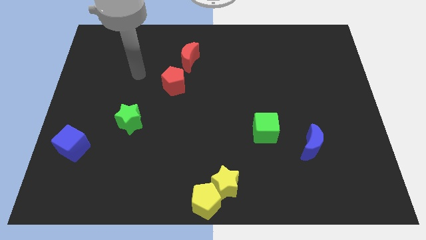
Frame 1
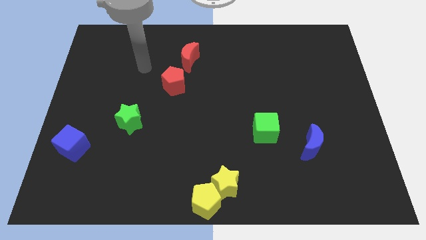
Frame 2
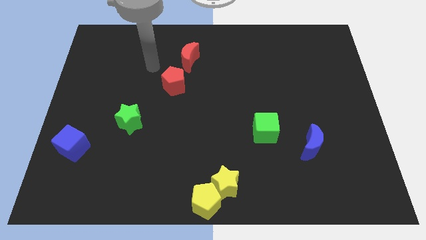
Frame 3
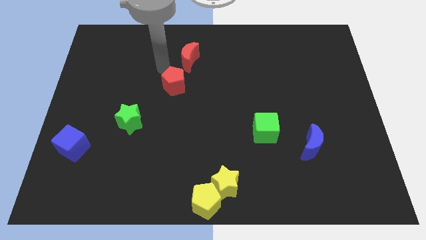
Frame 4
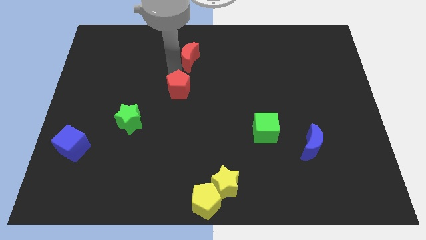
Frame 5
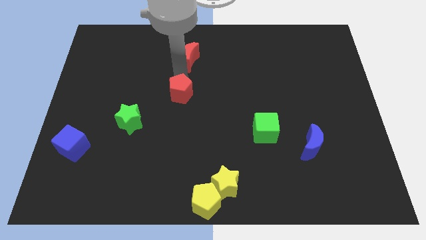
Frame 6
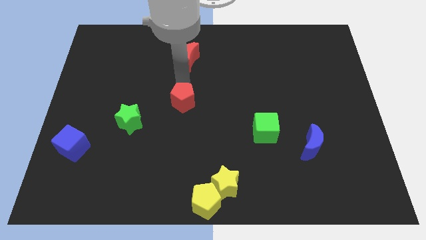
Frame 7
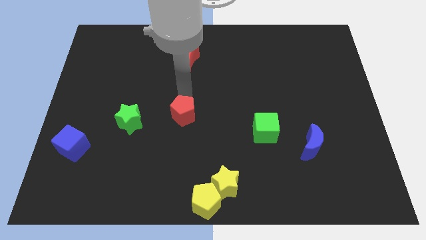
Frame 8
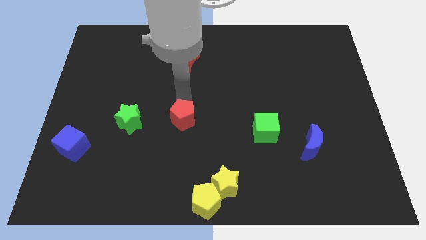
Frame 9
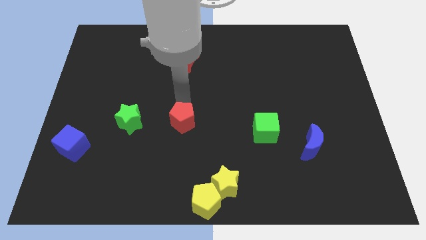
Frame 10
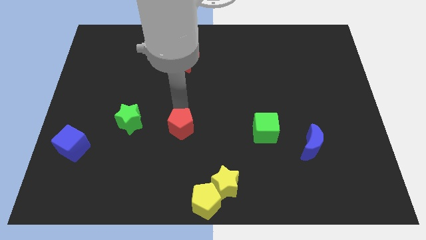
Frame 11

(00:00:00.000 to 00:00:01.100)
push red pentagon in between green star and green cube

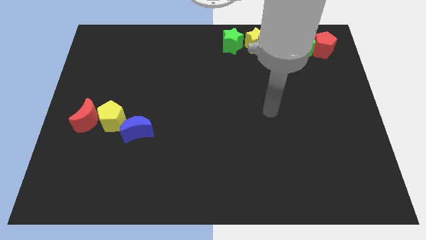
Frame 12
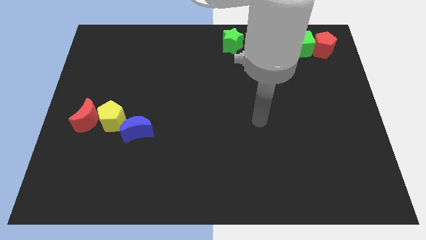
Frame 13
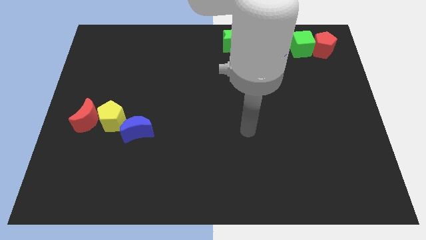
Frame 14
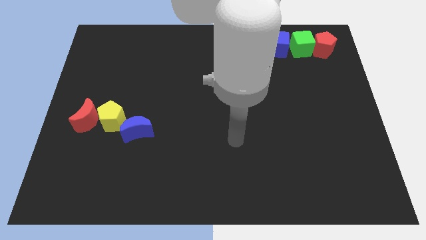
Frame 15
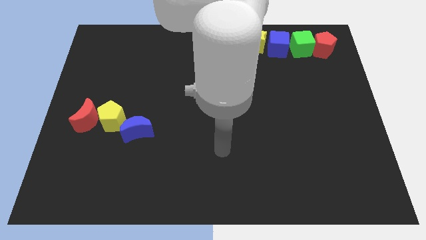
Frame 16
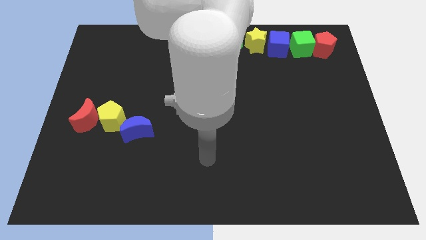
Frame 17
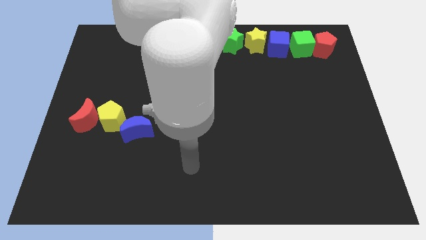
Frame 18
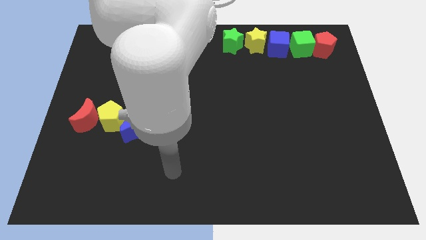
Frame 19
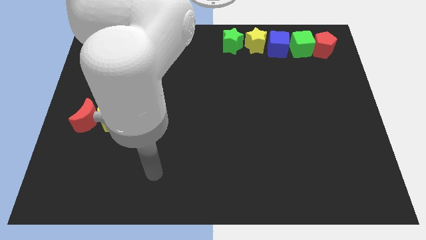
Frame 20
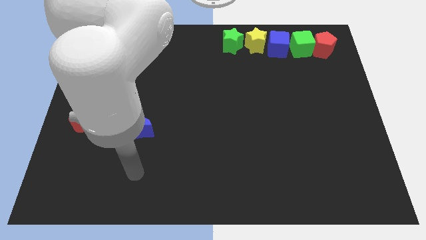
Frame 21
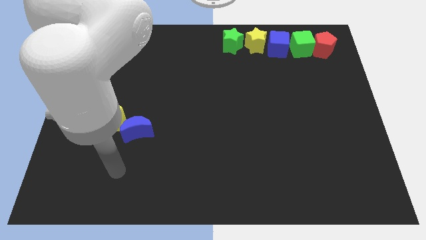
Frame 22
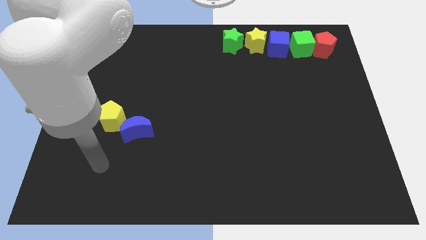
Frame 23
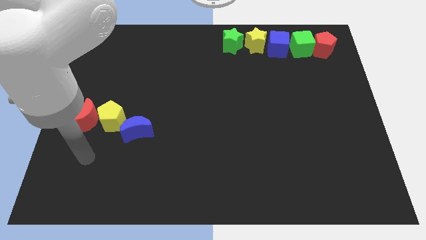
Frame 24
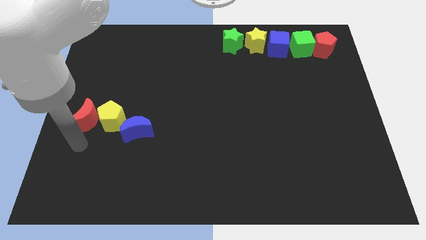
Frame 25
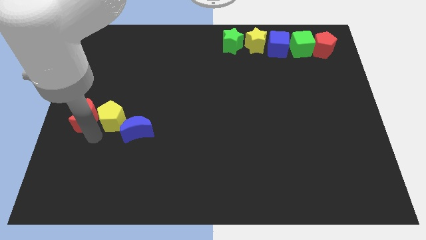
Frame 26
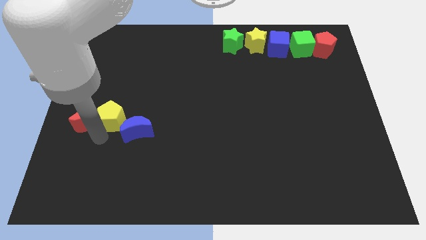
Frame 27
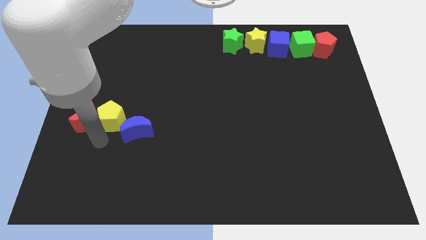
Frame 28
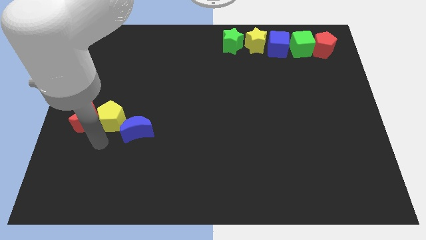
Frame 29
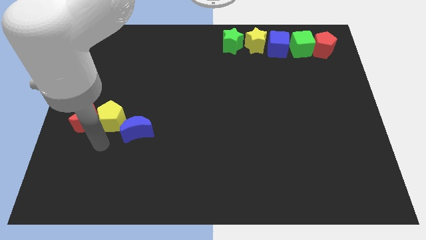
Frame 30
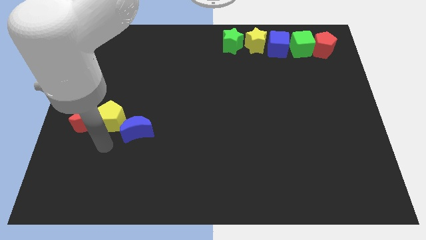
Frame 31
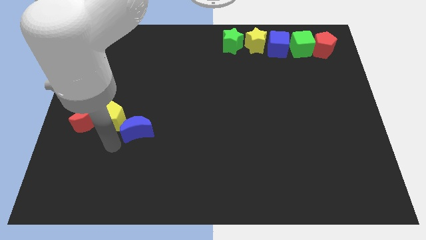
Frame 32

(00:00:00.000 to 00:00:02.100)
point your arm at the bottom side of the yellow pentagon

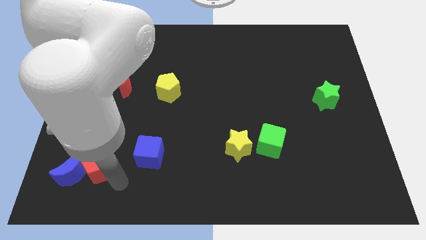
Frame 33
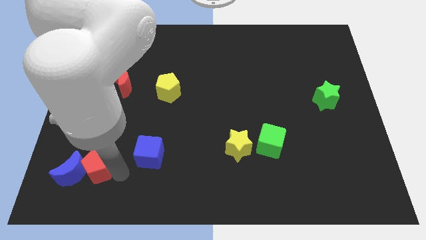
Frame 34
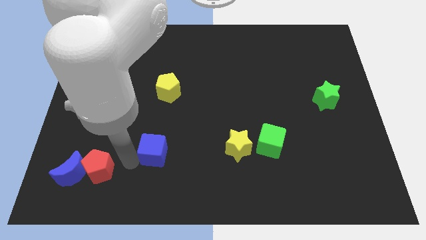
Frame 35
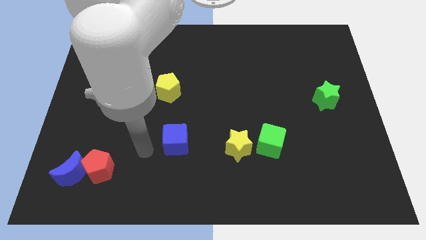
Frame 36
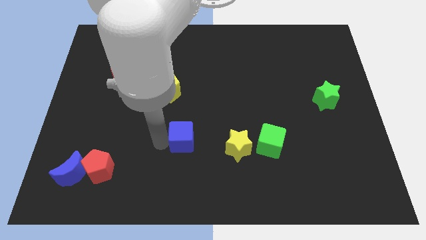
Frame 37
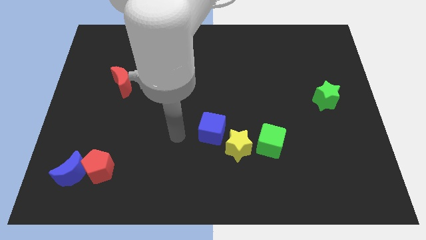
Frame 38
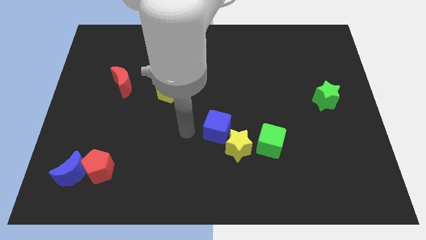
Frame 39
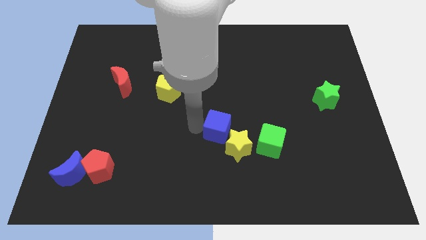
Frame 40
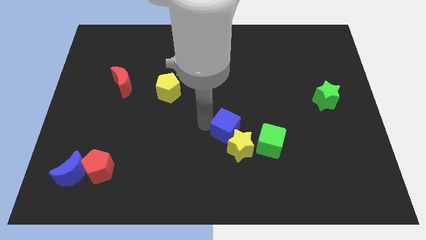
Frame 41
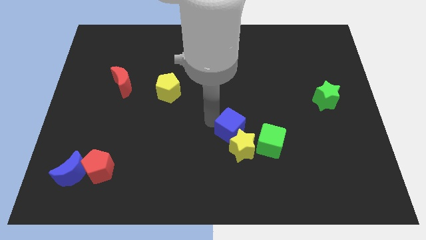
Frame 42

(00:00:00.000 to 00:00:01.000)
push the blue cube top left to the yellow star

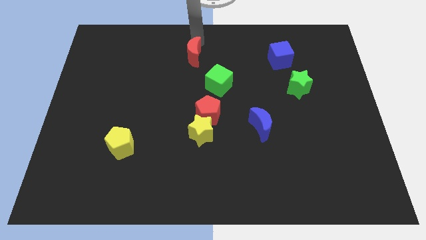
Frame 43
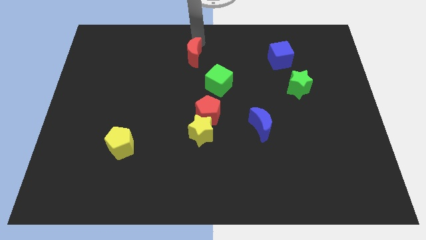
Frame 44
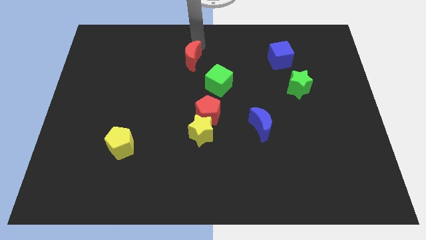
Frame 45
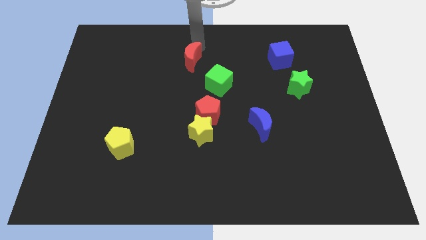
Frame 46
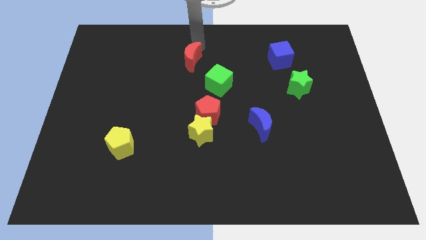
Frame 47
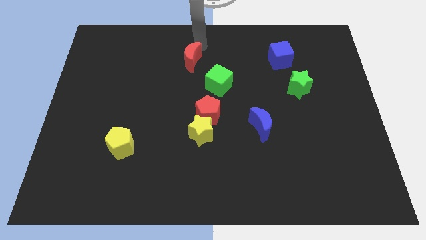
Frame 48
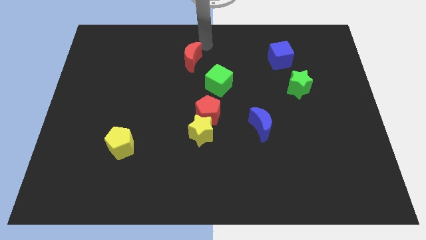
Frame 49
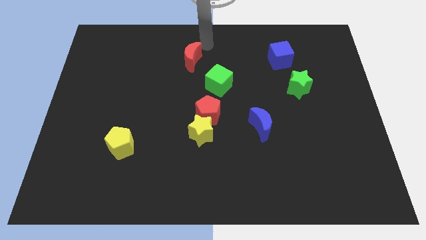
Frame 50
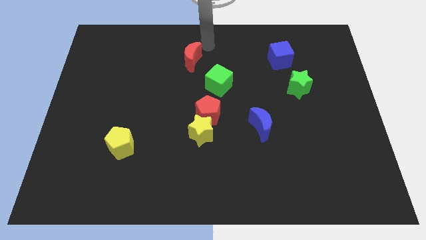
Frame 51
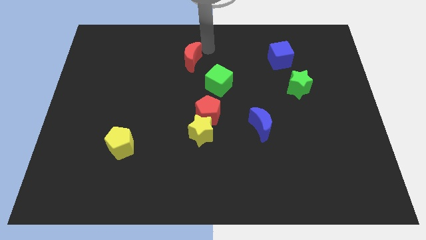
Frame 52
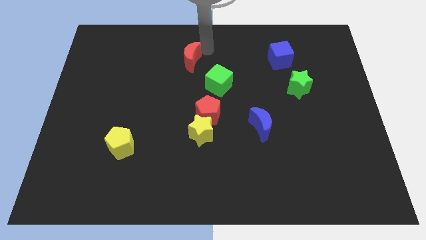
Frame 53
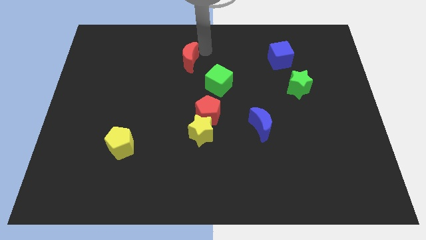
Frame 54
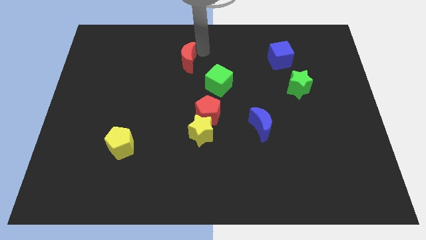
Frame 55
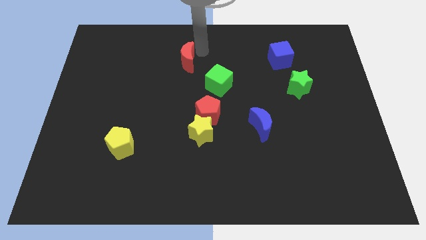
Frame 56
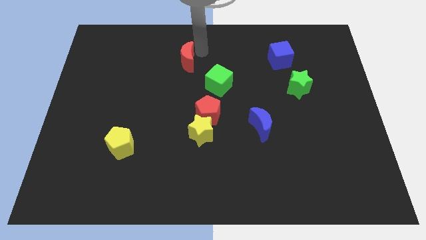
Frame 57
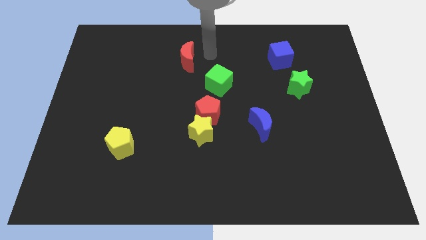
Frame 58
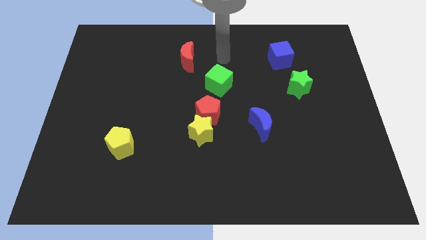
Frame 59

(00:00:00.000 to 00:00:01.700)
slightly touch to the red crescent

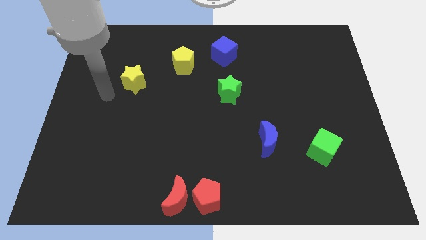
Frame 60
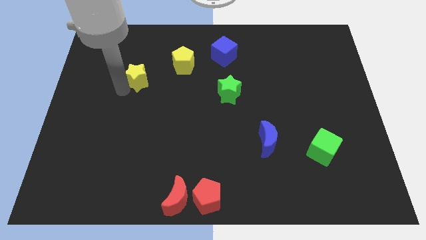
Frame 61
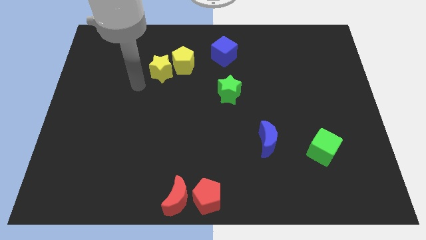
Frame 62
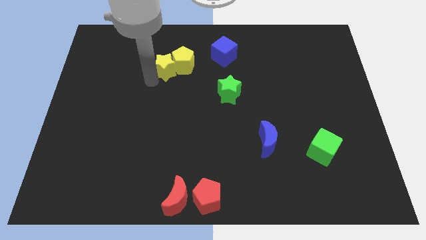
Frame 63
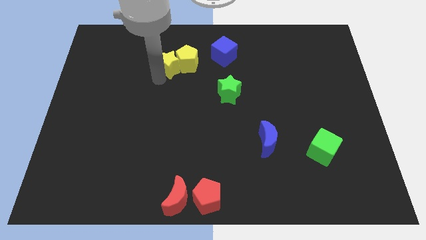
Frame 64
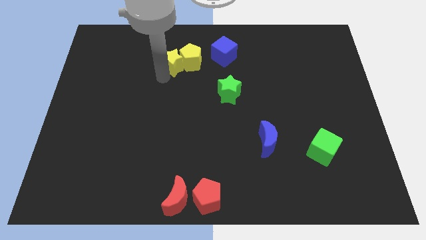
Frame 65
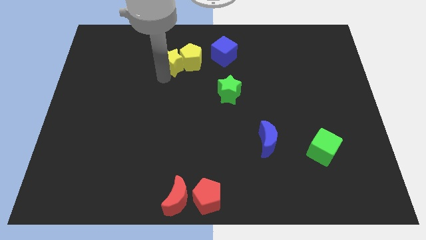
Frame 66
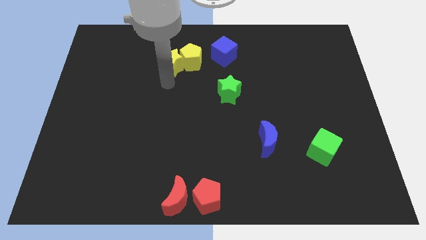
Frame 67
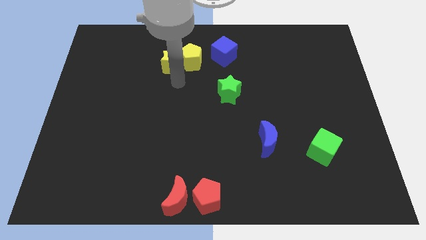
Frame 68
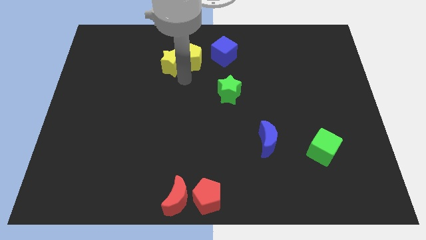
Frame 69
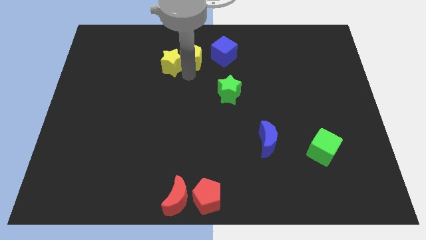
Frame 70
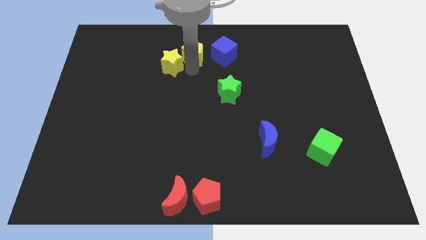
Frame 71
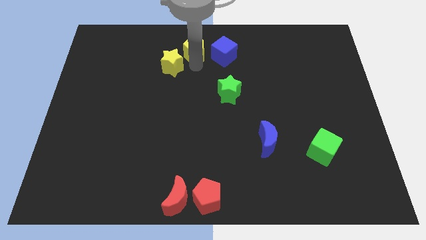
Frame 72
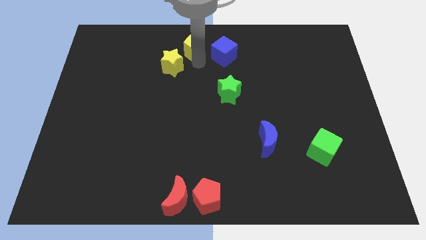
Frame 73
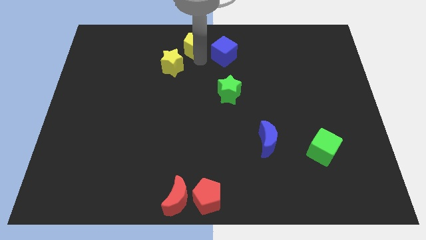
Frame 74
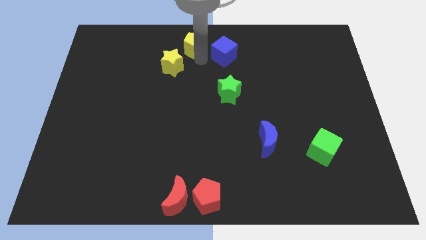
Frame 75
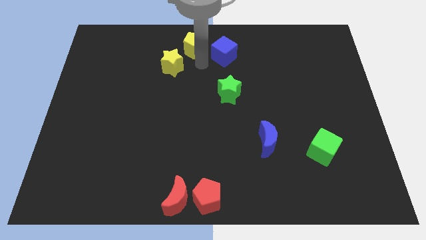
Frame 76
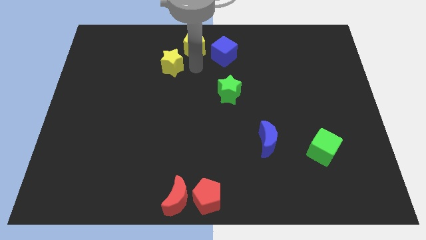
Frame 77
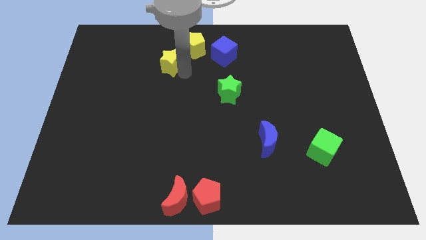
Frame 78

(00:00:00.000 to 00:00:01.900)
push the yellow pentagon towards the top center of the board with the help of the yellow star

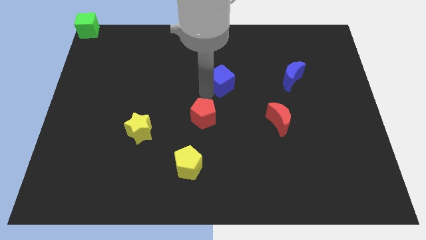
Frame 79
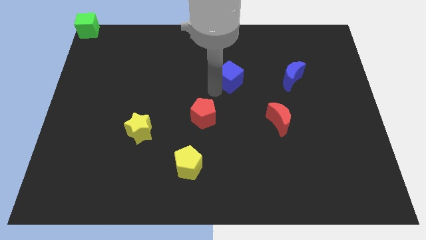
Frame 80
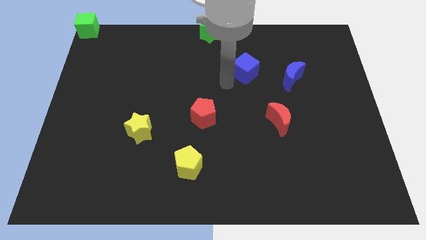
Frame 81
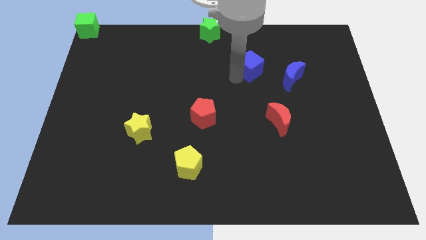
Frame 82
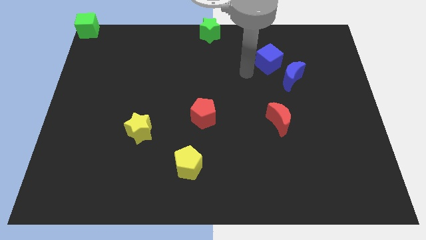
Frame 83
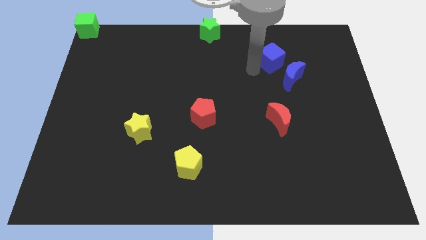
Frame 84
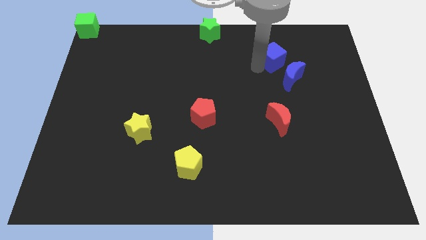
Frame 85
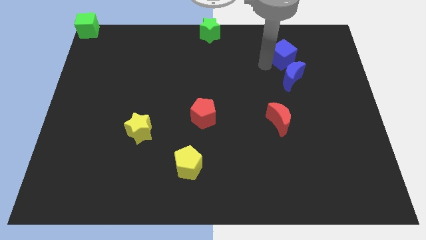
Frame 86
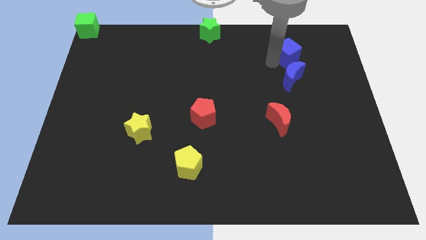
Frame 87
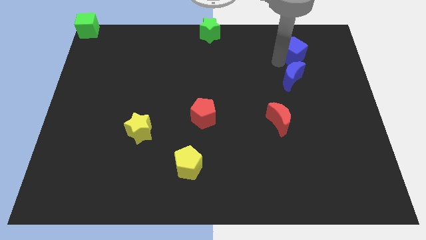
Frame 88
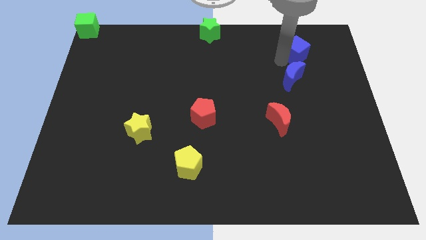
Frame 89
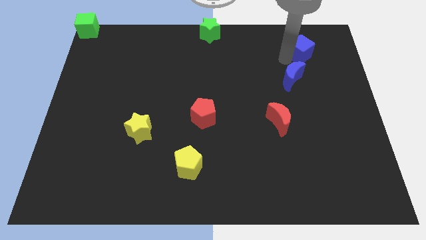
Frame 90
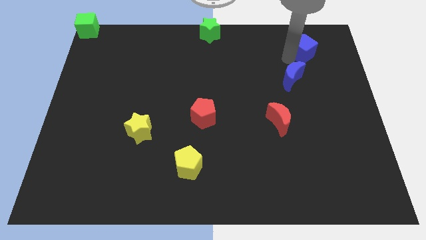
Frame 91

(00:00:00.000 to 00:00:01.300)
move the blue cube at the top side of the blue crescent
